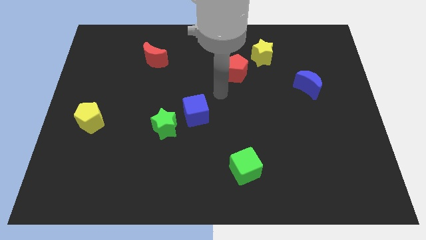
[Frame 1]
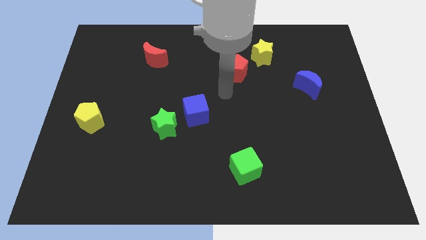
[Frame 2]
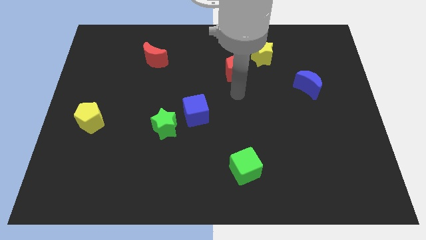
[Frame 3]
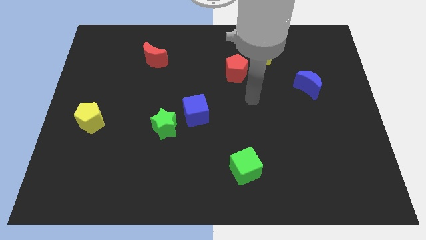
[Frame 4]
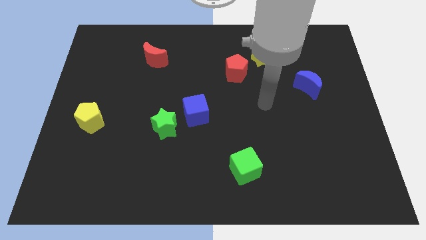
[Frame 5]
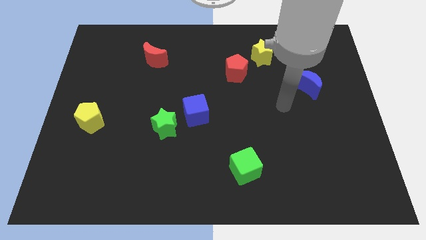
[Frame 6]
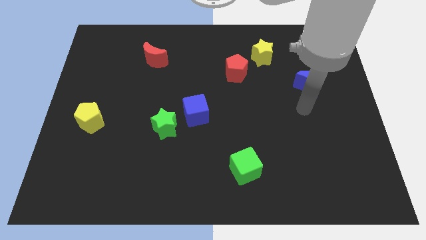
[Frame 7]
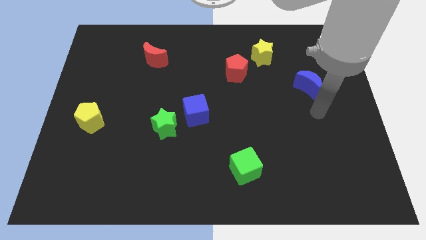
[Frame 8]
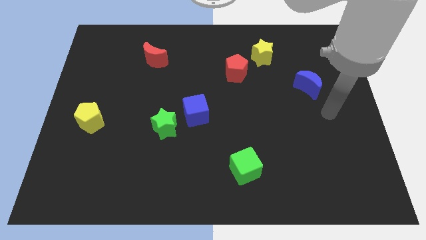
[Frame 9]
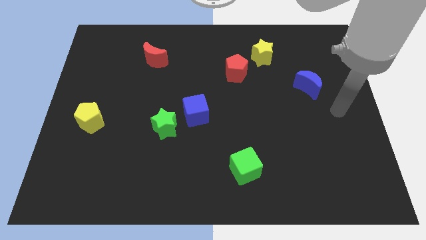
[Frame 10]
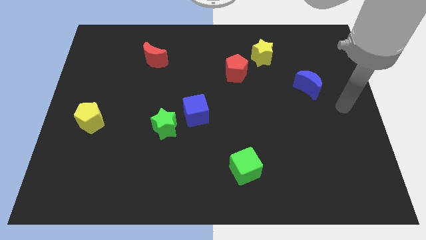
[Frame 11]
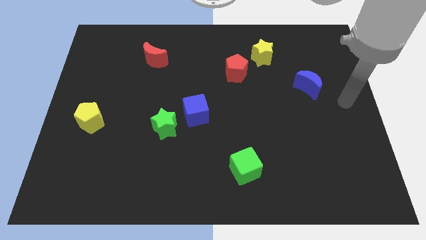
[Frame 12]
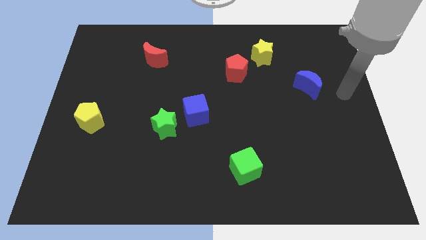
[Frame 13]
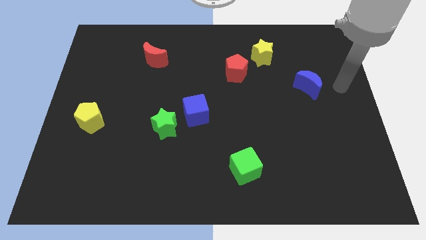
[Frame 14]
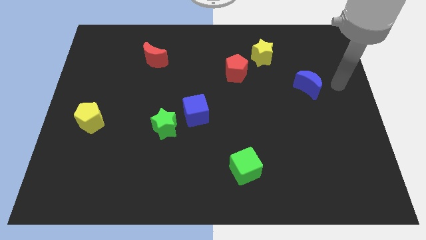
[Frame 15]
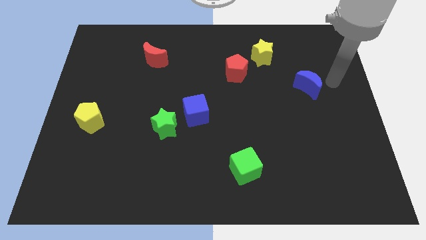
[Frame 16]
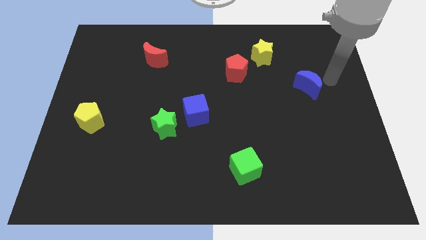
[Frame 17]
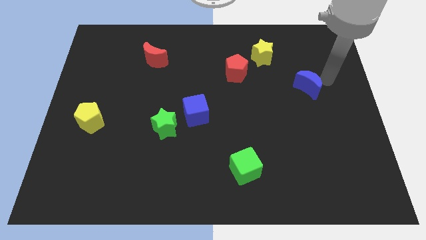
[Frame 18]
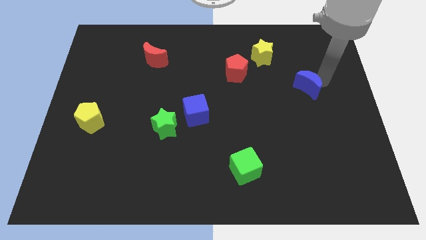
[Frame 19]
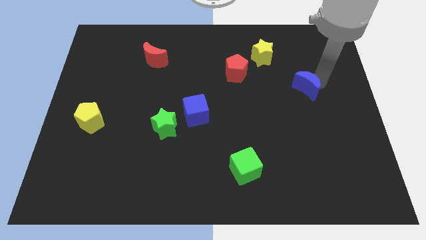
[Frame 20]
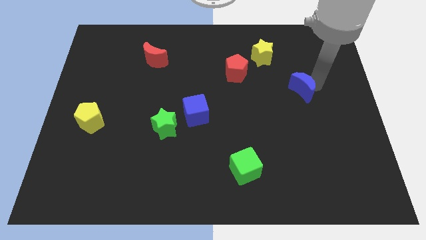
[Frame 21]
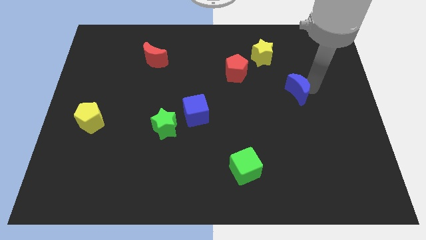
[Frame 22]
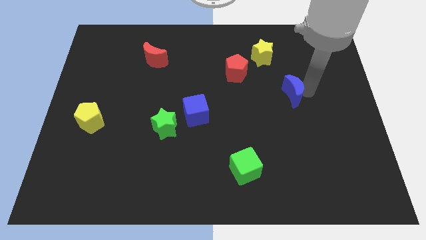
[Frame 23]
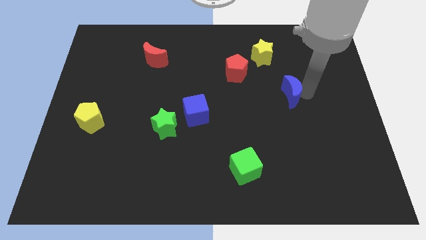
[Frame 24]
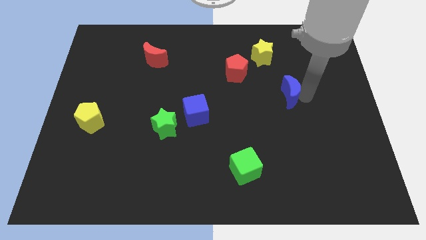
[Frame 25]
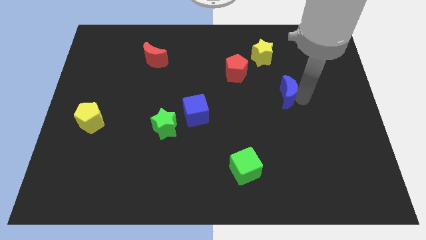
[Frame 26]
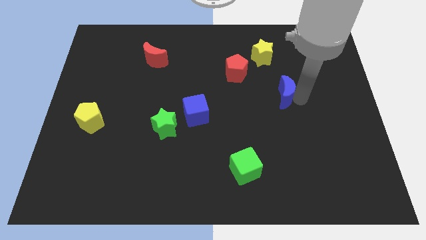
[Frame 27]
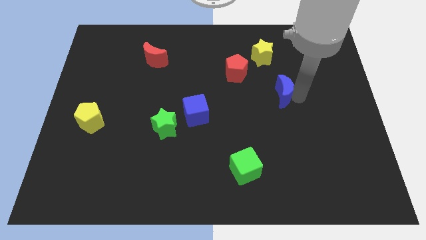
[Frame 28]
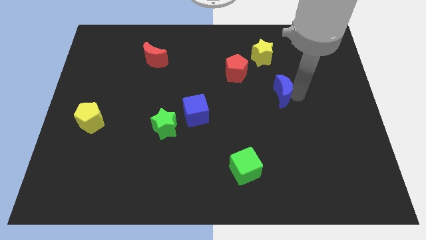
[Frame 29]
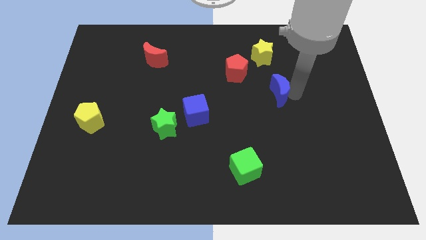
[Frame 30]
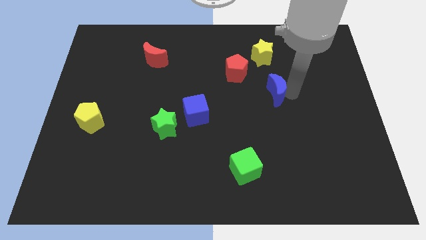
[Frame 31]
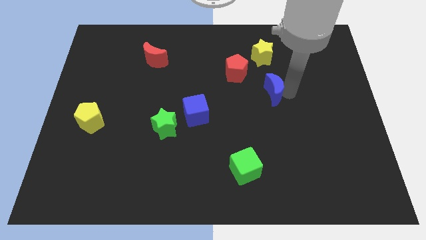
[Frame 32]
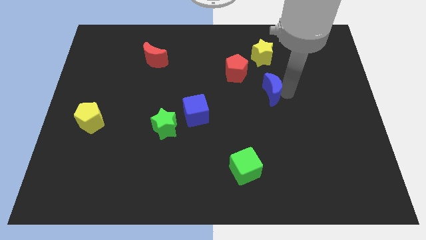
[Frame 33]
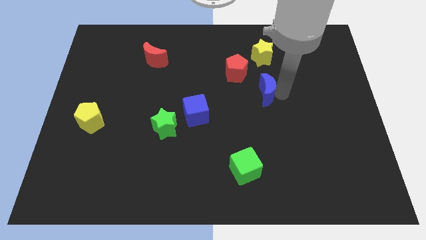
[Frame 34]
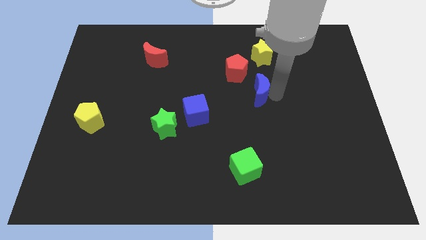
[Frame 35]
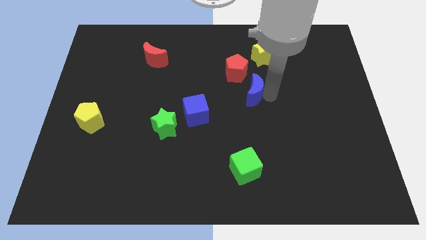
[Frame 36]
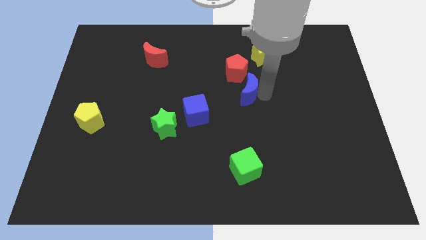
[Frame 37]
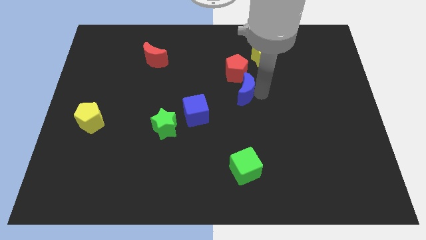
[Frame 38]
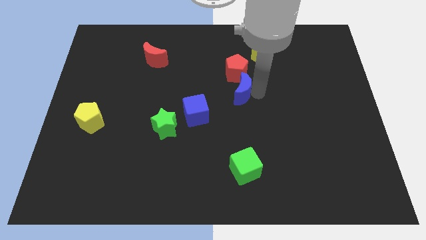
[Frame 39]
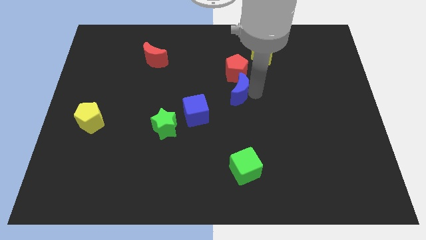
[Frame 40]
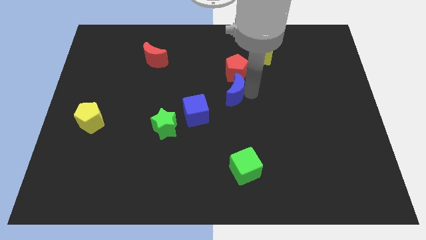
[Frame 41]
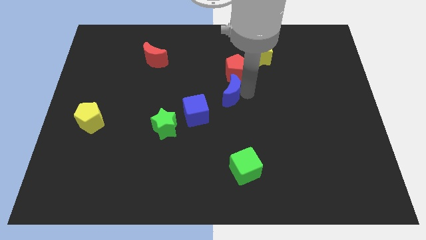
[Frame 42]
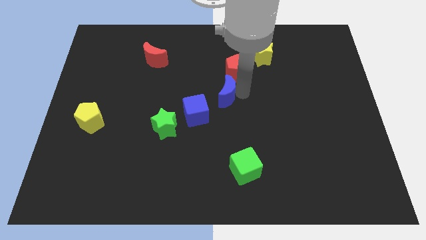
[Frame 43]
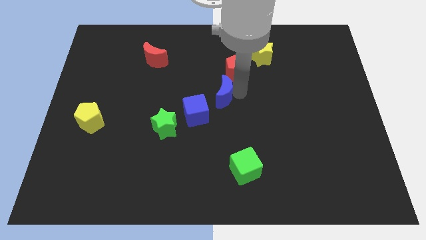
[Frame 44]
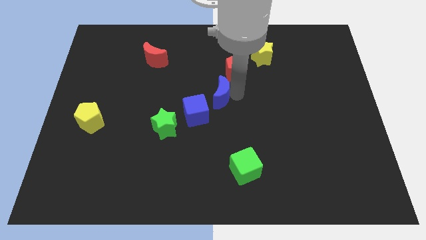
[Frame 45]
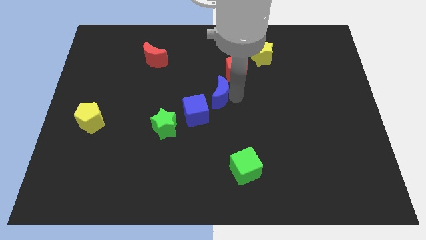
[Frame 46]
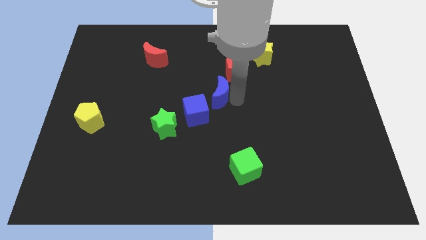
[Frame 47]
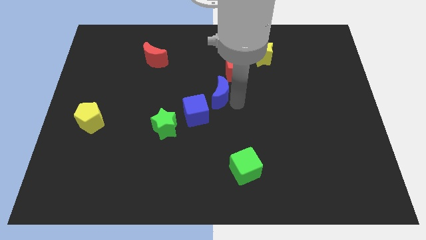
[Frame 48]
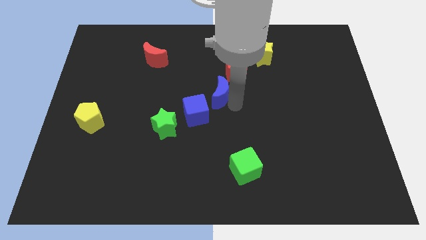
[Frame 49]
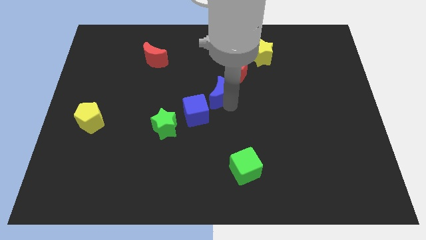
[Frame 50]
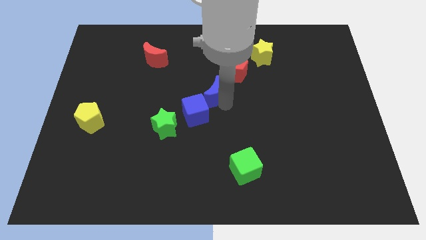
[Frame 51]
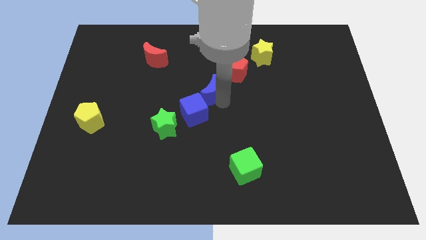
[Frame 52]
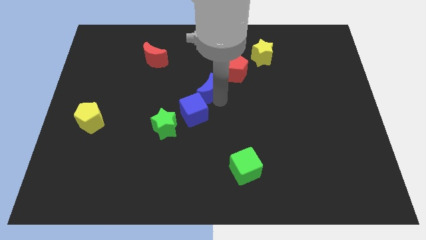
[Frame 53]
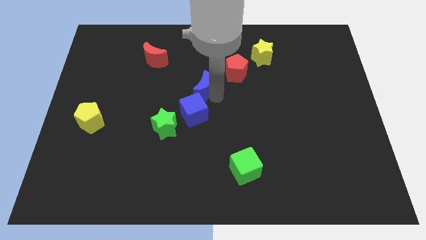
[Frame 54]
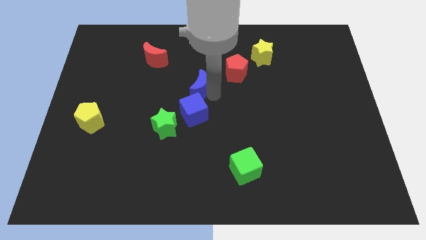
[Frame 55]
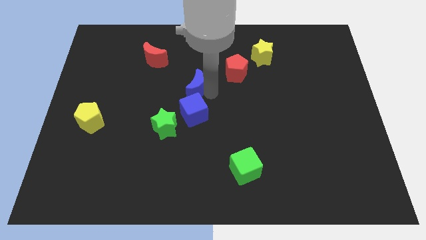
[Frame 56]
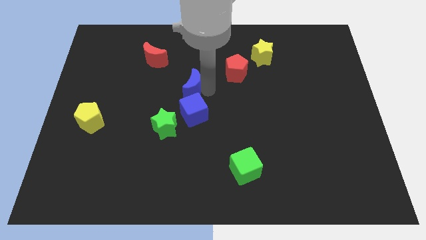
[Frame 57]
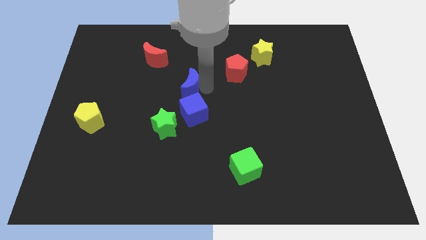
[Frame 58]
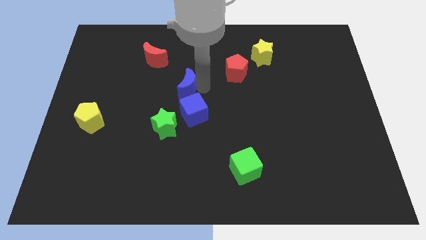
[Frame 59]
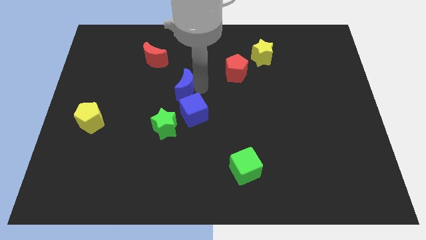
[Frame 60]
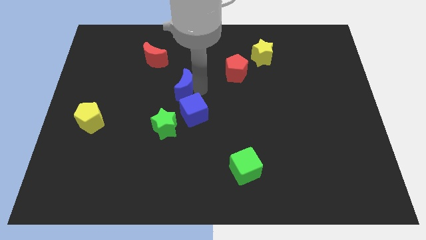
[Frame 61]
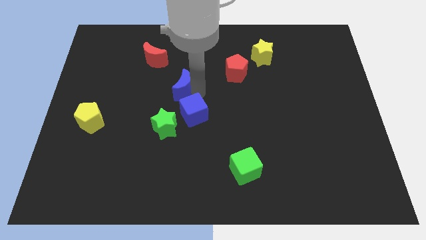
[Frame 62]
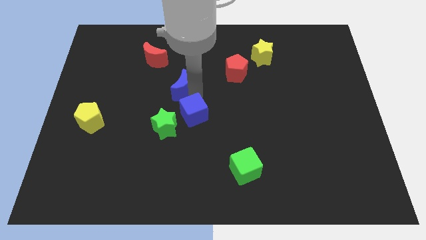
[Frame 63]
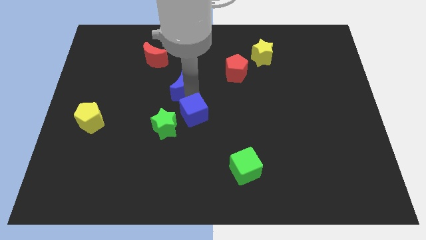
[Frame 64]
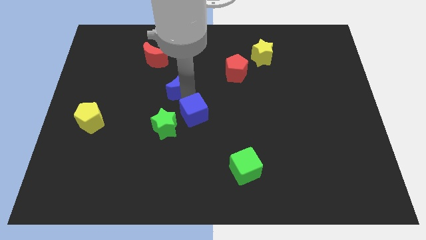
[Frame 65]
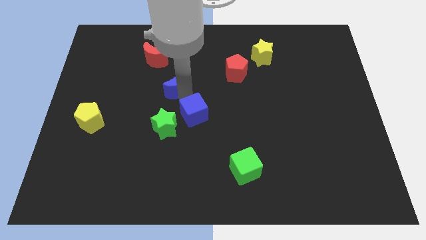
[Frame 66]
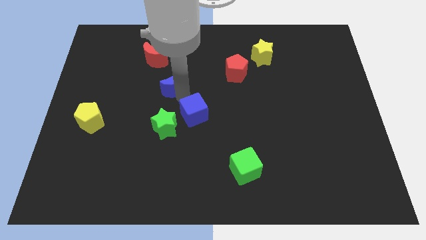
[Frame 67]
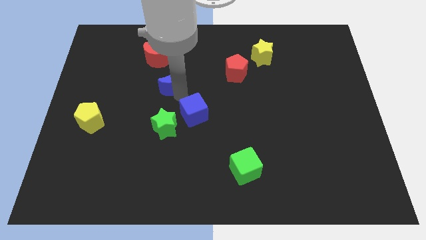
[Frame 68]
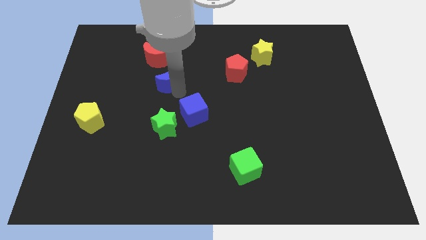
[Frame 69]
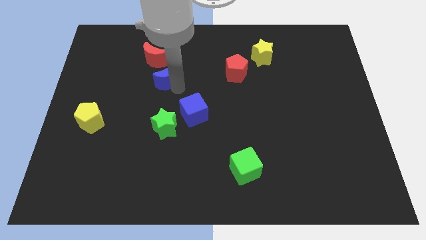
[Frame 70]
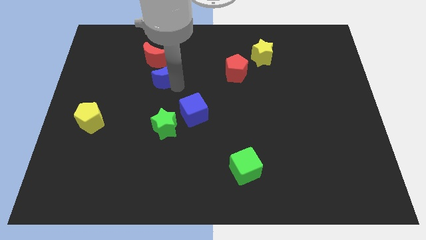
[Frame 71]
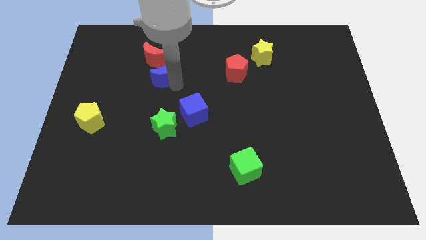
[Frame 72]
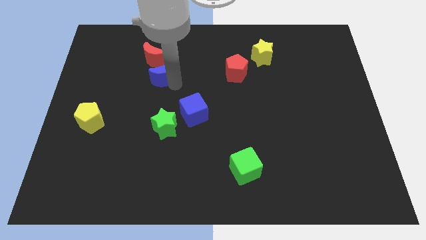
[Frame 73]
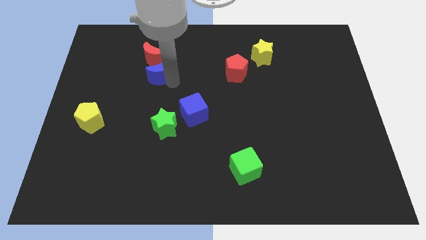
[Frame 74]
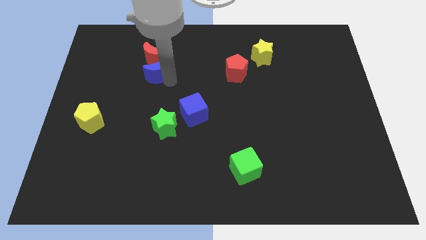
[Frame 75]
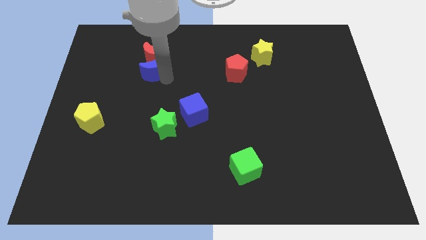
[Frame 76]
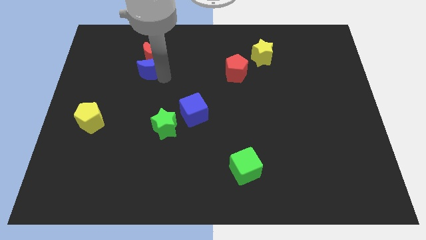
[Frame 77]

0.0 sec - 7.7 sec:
push the blue moon to the red moon

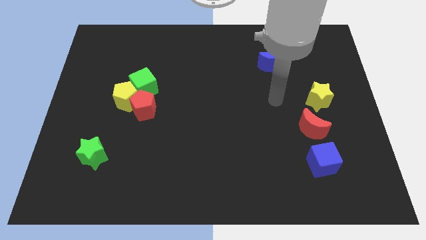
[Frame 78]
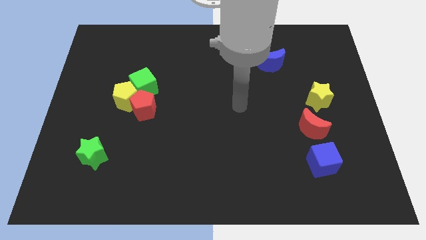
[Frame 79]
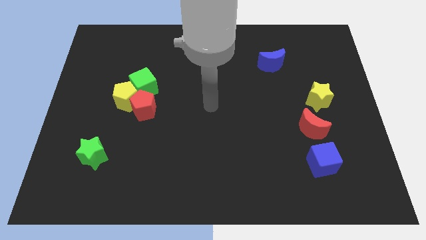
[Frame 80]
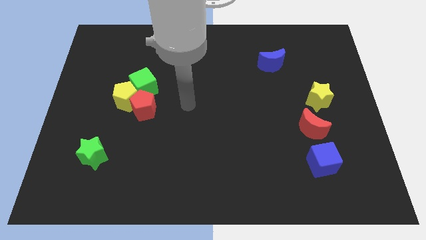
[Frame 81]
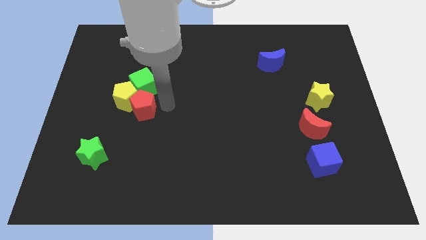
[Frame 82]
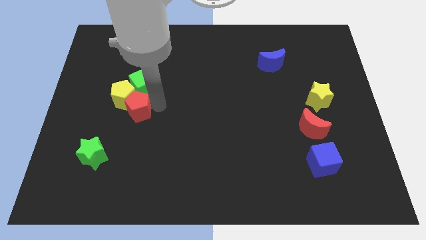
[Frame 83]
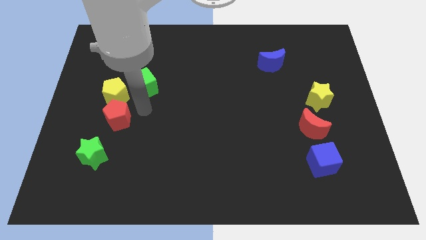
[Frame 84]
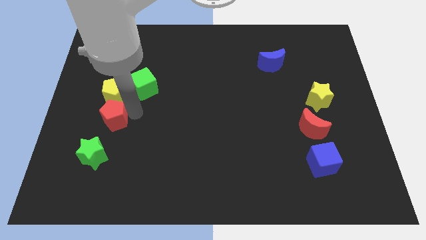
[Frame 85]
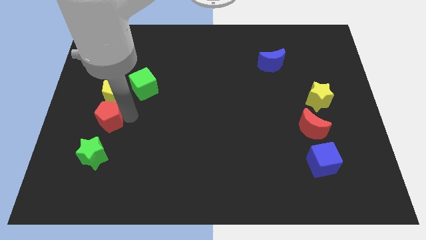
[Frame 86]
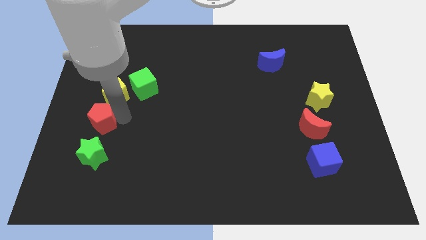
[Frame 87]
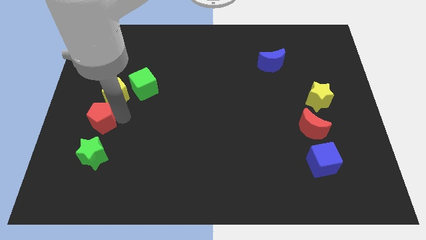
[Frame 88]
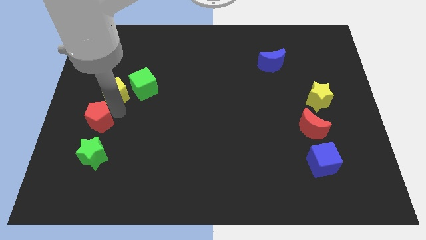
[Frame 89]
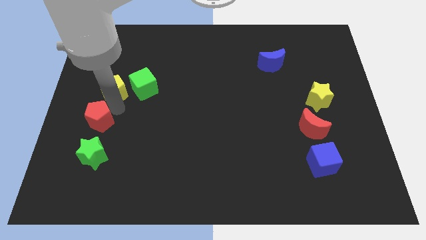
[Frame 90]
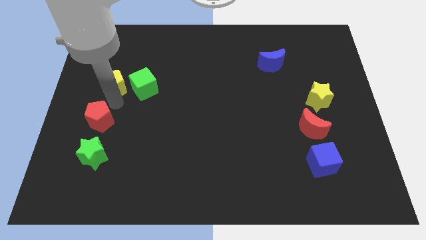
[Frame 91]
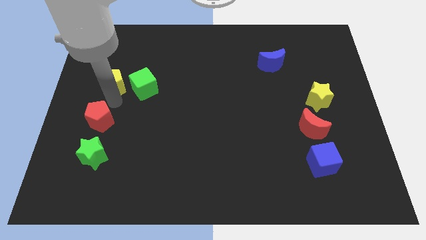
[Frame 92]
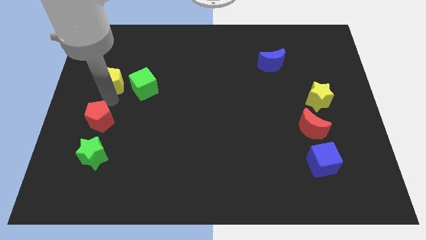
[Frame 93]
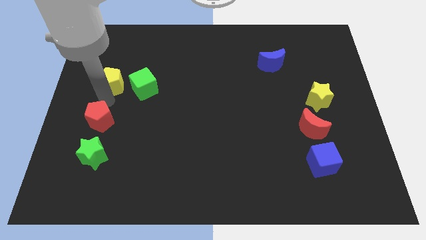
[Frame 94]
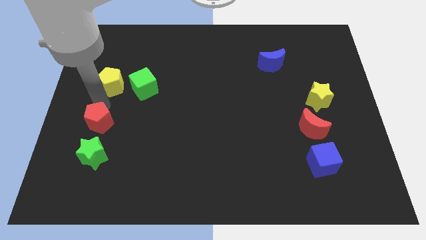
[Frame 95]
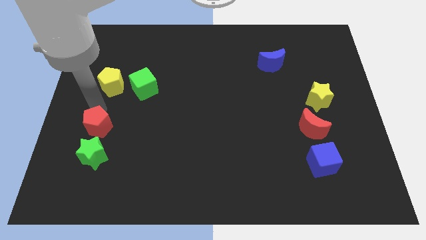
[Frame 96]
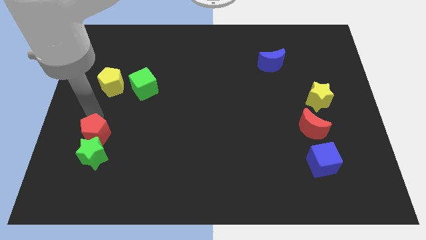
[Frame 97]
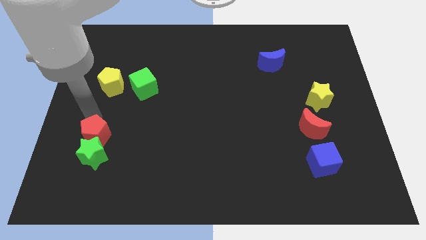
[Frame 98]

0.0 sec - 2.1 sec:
move the red pentagon towards the green star
